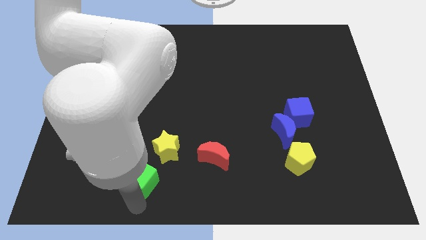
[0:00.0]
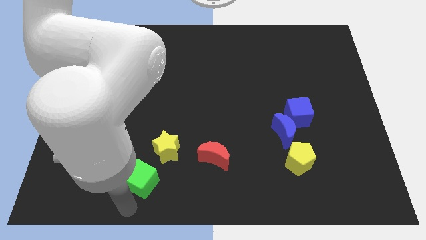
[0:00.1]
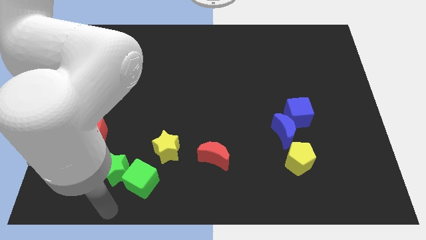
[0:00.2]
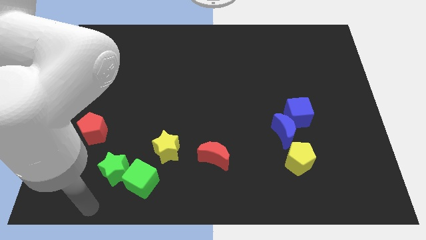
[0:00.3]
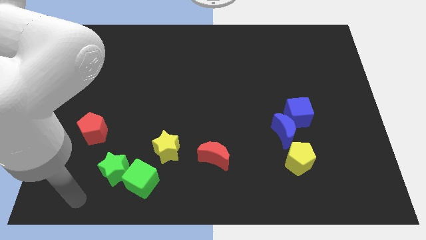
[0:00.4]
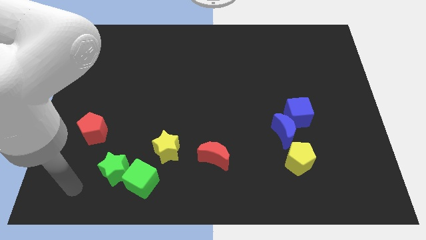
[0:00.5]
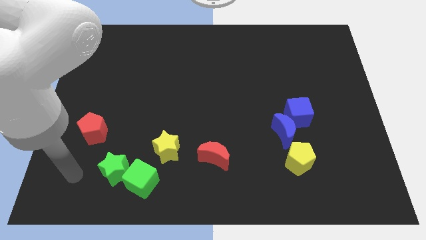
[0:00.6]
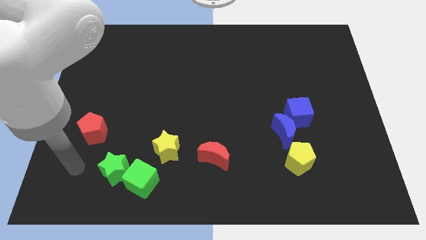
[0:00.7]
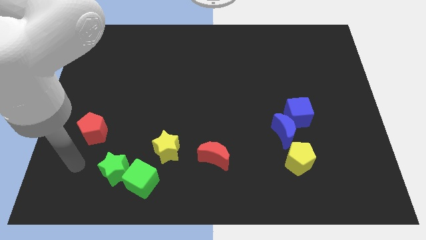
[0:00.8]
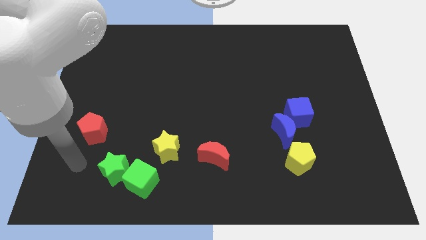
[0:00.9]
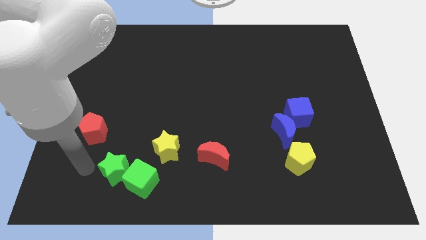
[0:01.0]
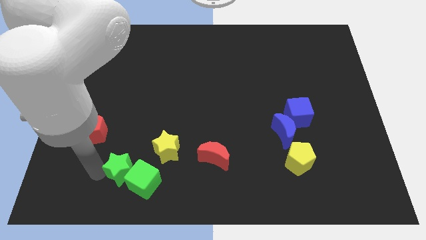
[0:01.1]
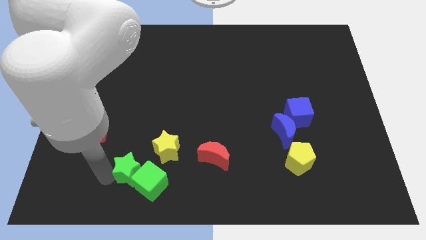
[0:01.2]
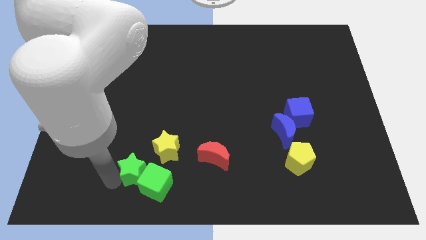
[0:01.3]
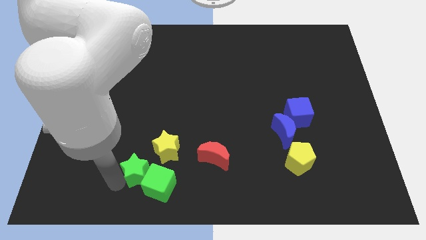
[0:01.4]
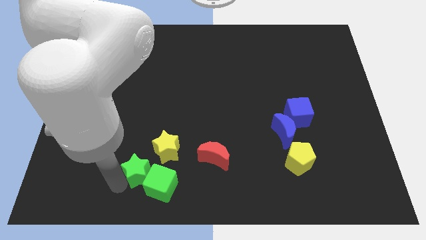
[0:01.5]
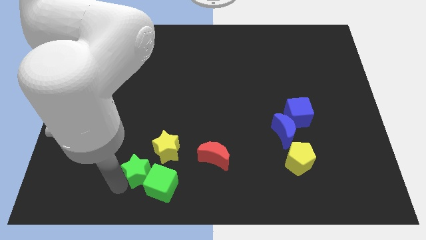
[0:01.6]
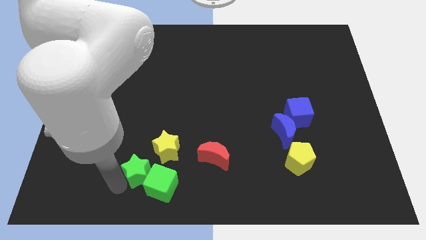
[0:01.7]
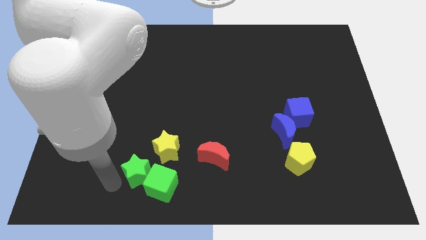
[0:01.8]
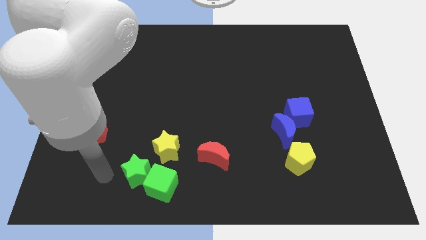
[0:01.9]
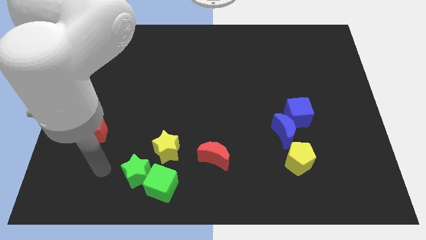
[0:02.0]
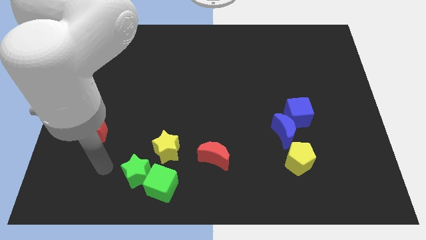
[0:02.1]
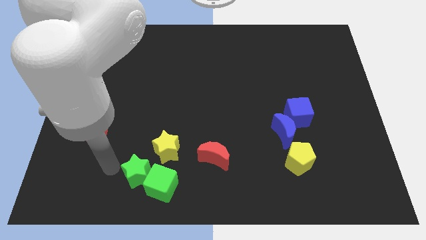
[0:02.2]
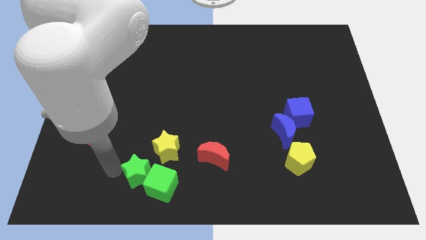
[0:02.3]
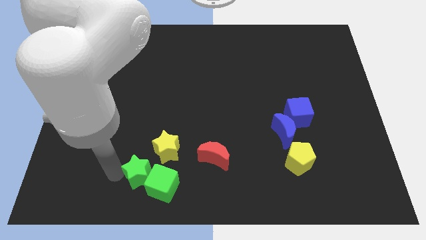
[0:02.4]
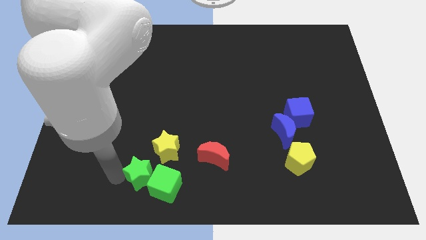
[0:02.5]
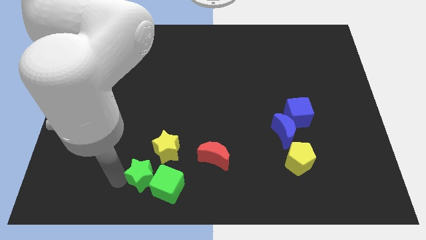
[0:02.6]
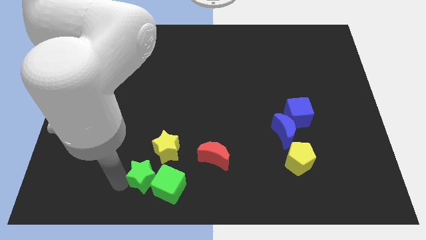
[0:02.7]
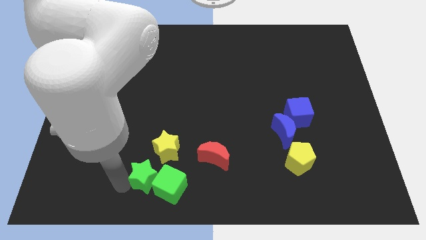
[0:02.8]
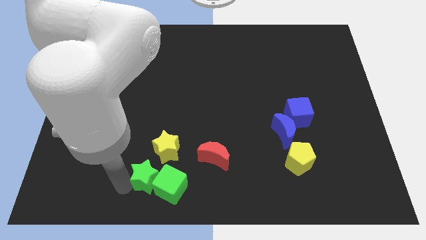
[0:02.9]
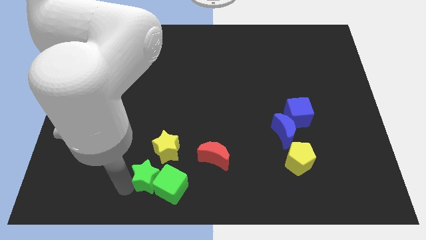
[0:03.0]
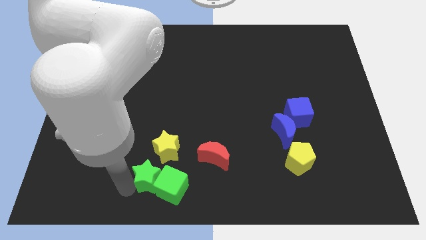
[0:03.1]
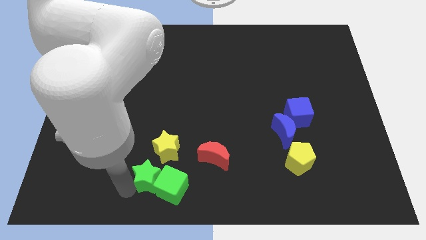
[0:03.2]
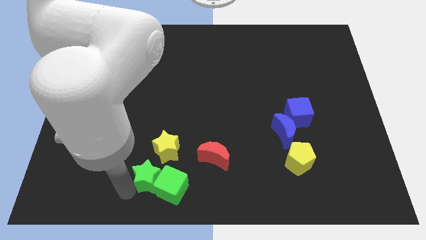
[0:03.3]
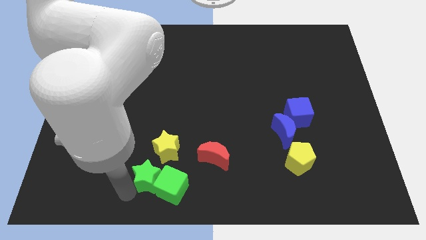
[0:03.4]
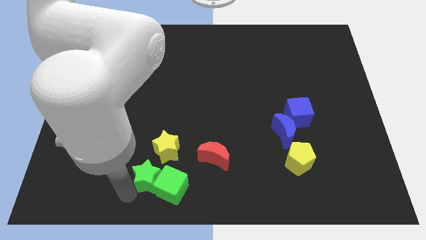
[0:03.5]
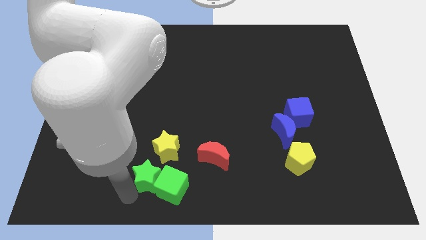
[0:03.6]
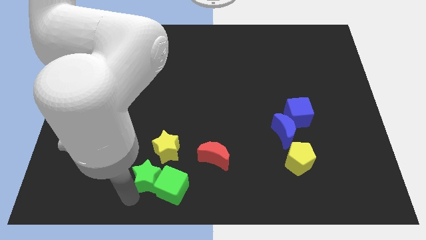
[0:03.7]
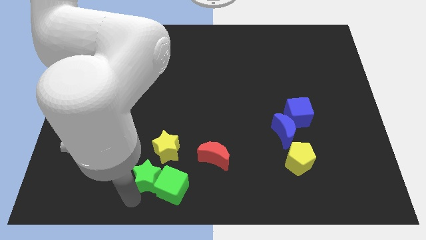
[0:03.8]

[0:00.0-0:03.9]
place the green star and green cube towards the bottom yellow star

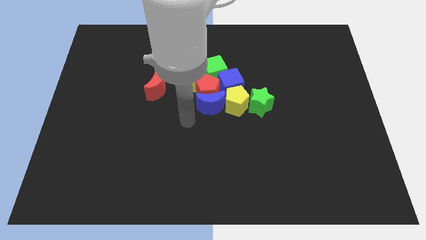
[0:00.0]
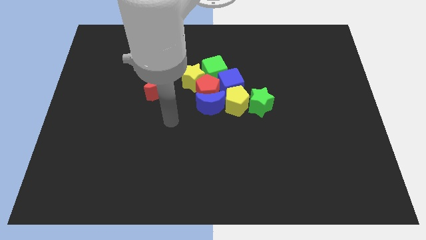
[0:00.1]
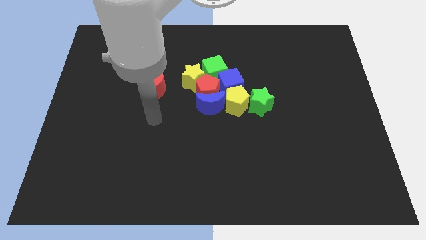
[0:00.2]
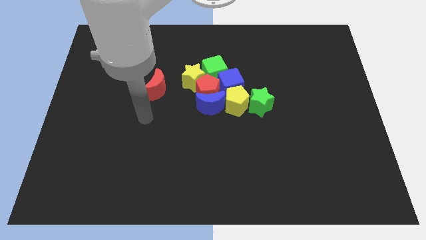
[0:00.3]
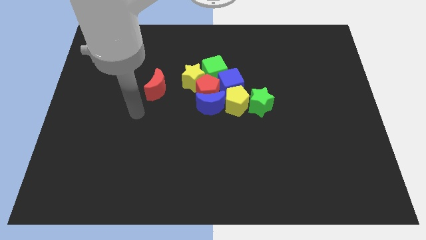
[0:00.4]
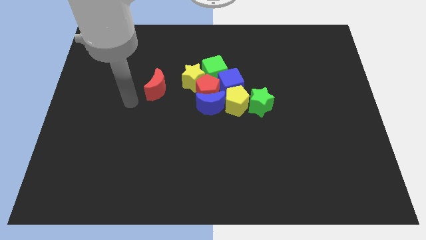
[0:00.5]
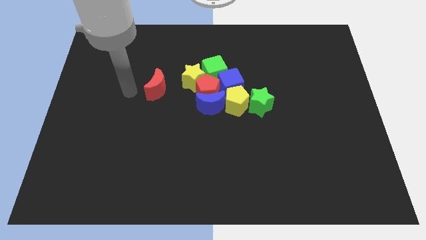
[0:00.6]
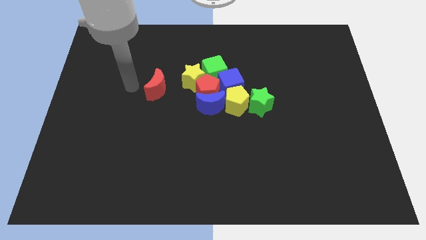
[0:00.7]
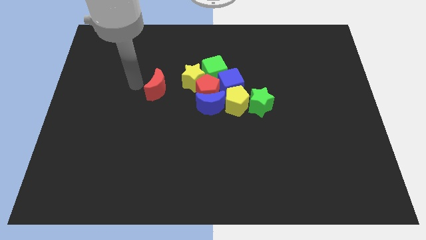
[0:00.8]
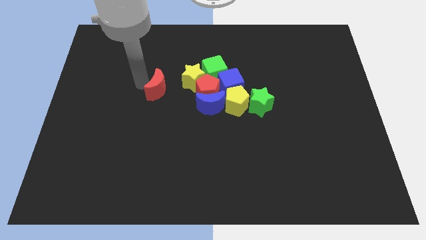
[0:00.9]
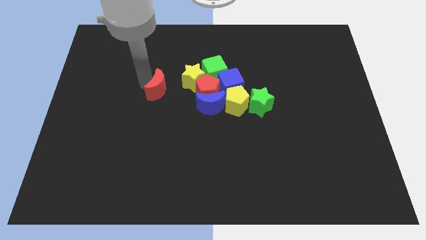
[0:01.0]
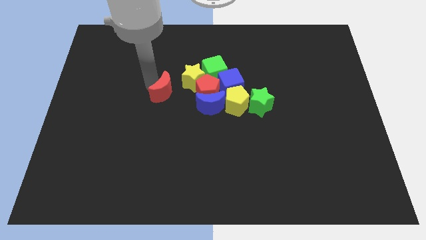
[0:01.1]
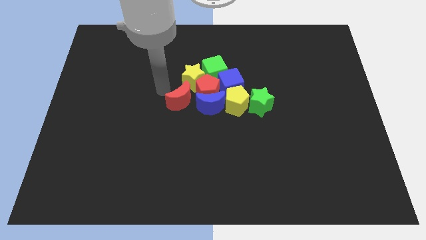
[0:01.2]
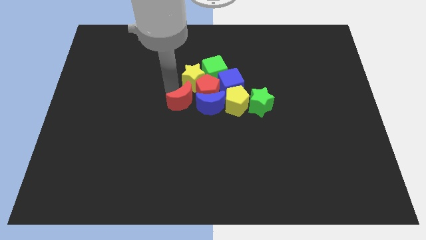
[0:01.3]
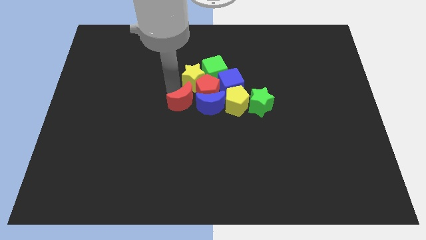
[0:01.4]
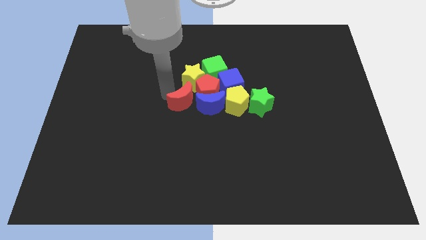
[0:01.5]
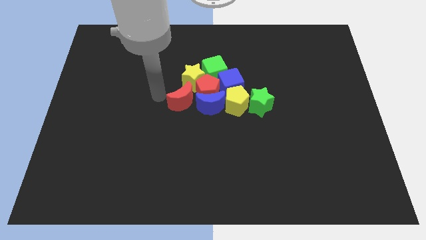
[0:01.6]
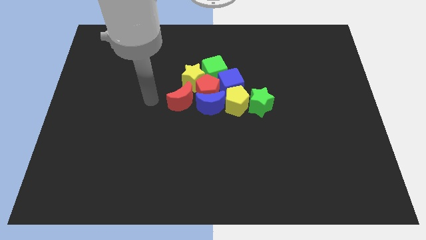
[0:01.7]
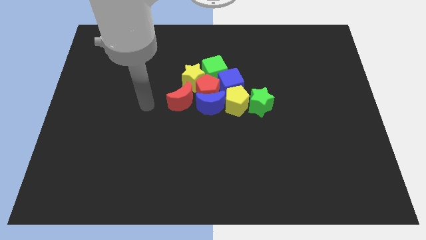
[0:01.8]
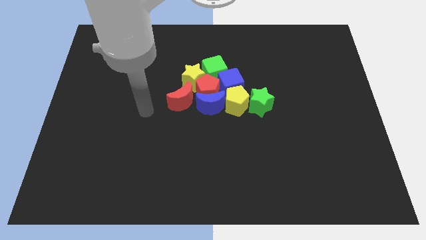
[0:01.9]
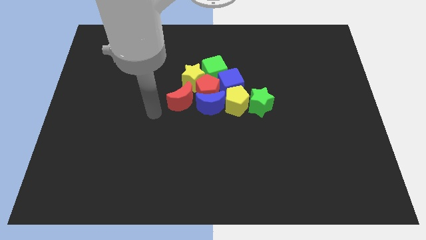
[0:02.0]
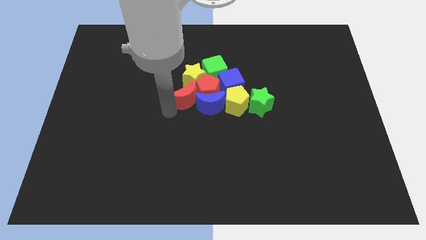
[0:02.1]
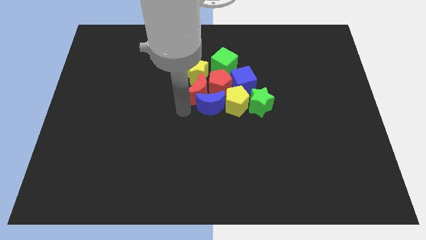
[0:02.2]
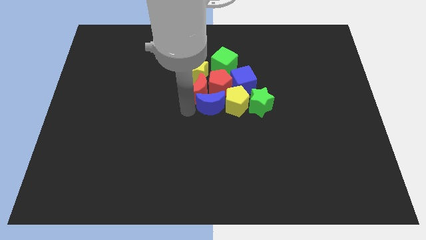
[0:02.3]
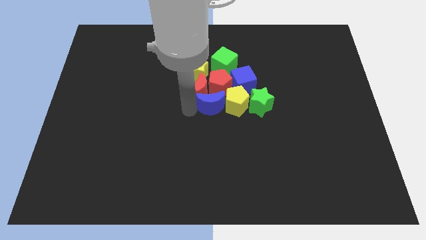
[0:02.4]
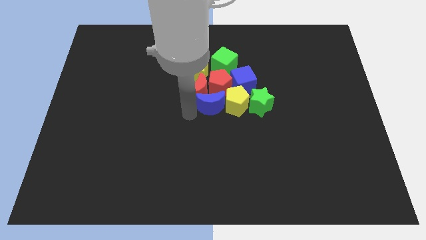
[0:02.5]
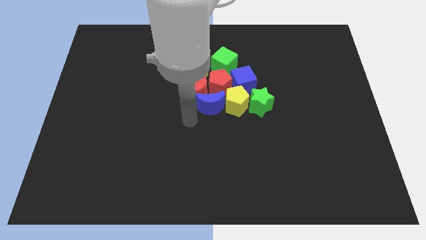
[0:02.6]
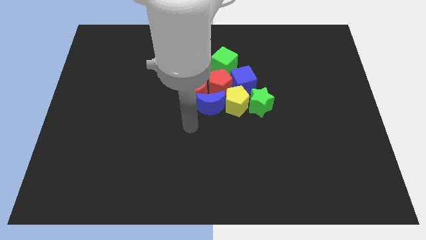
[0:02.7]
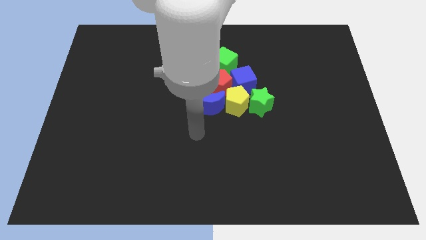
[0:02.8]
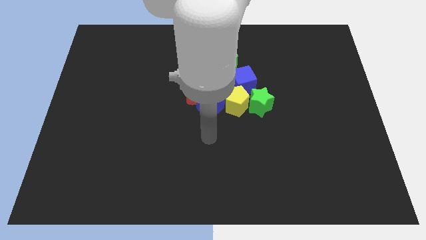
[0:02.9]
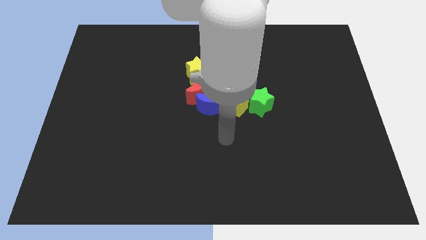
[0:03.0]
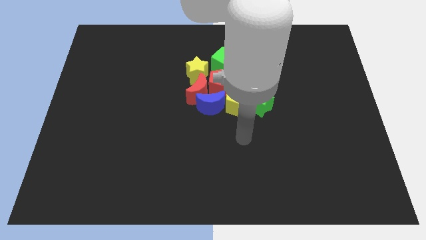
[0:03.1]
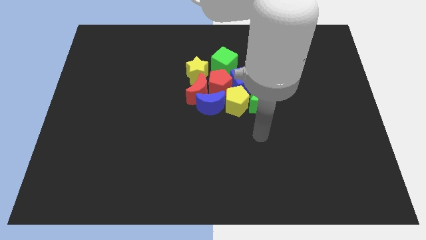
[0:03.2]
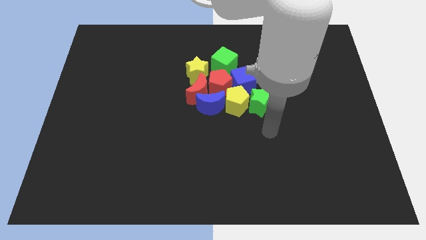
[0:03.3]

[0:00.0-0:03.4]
move red moon into red pentagon

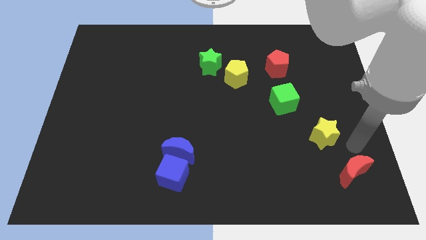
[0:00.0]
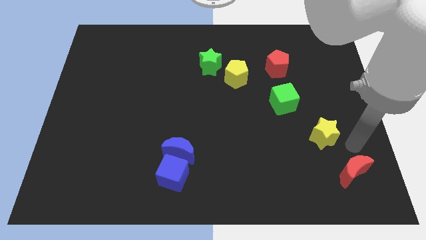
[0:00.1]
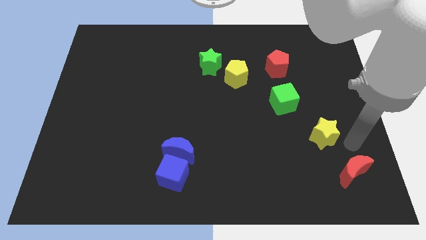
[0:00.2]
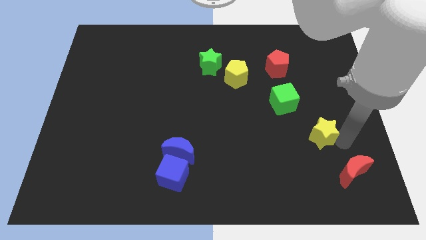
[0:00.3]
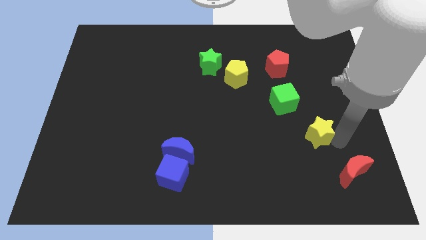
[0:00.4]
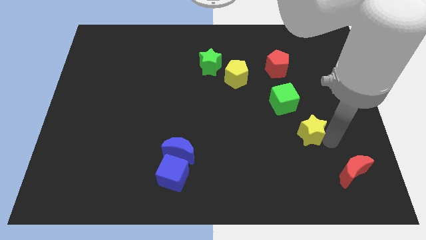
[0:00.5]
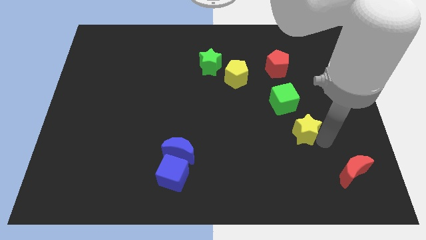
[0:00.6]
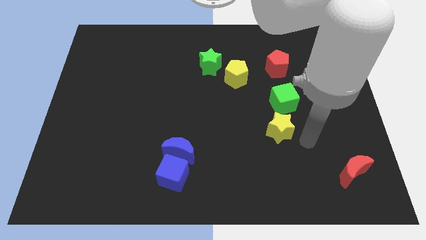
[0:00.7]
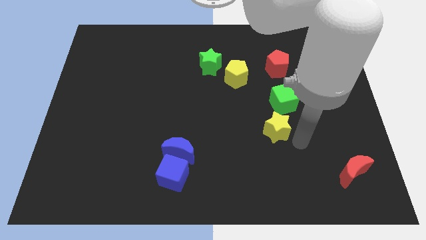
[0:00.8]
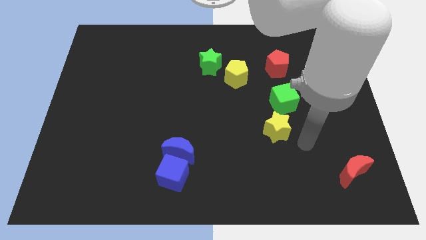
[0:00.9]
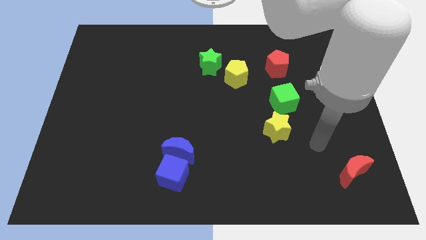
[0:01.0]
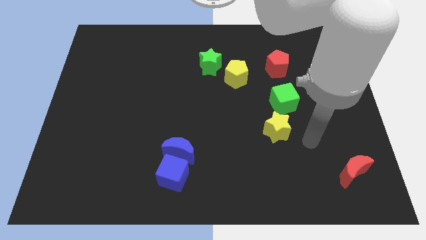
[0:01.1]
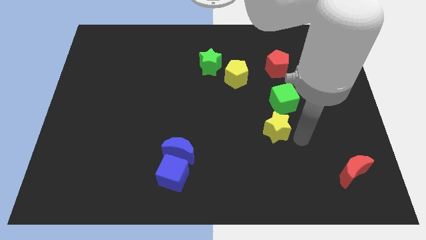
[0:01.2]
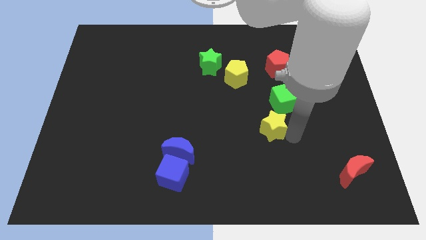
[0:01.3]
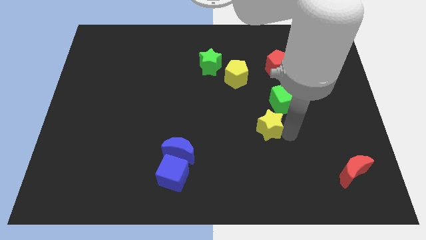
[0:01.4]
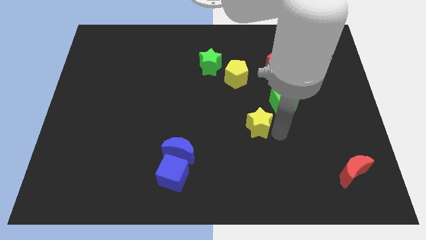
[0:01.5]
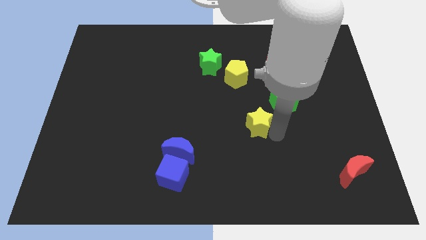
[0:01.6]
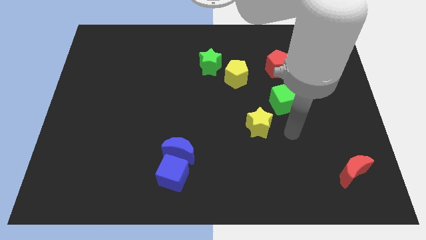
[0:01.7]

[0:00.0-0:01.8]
push the yellow star towards the center

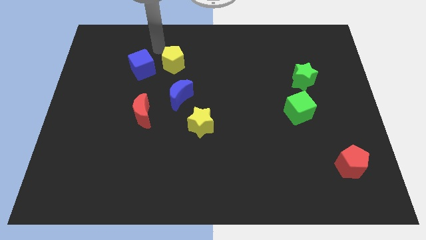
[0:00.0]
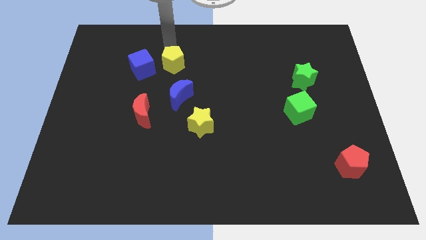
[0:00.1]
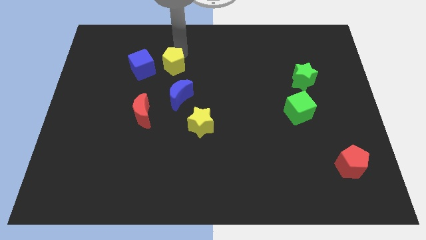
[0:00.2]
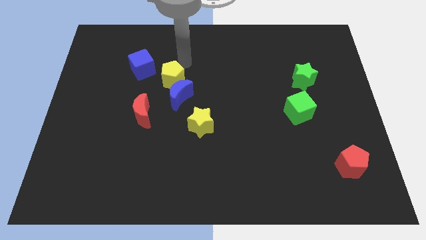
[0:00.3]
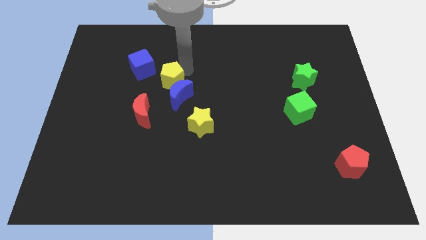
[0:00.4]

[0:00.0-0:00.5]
place yellow pentagon in between the blue cube and blue crescent
